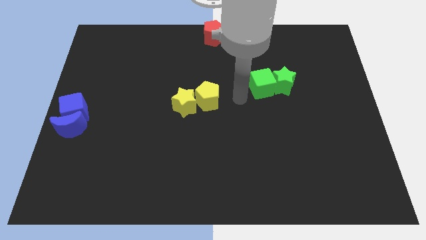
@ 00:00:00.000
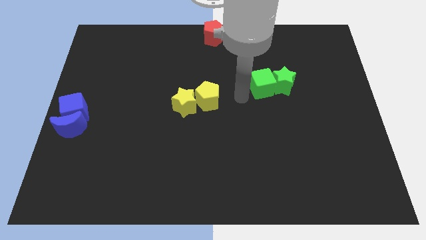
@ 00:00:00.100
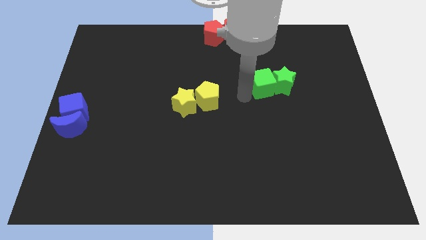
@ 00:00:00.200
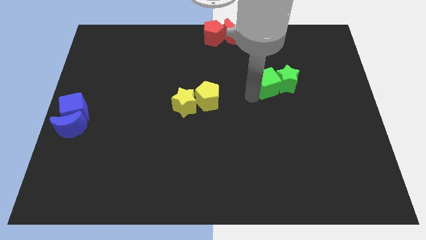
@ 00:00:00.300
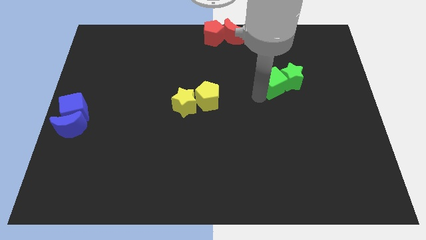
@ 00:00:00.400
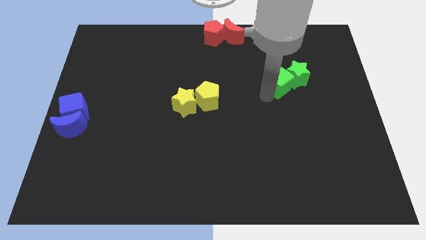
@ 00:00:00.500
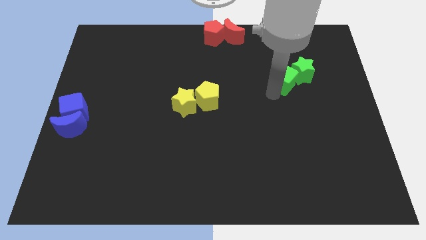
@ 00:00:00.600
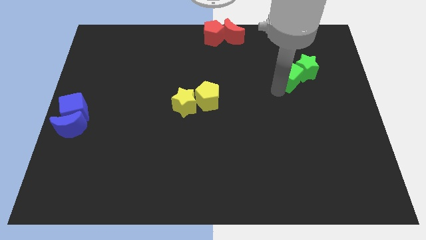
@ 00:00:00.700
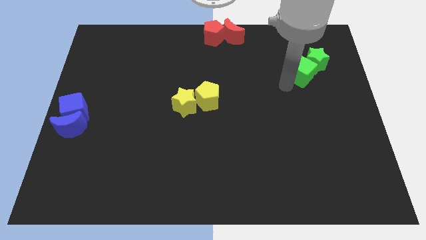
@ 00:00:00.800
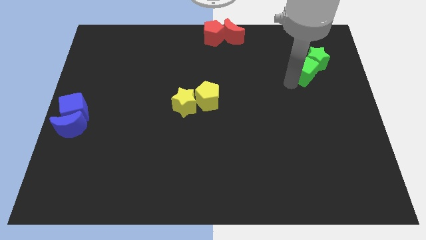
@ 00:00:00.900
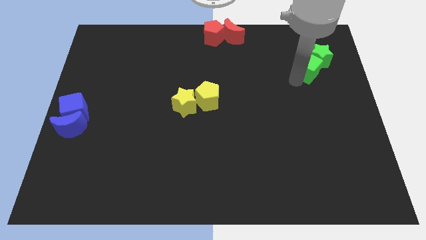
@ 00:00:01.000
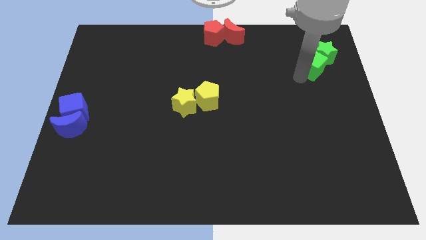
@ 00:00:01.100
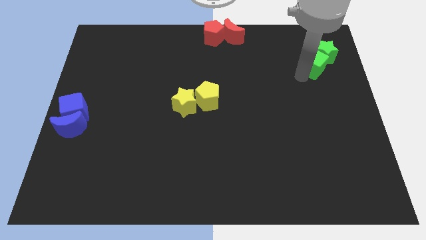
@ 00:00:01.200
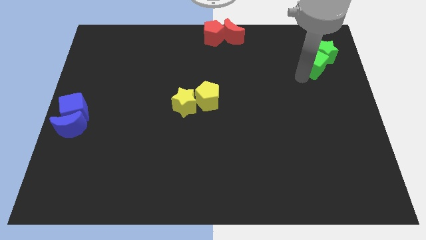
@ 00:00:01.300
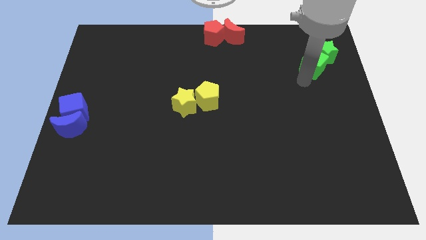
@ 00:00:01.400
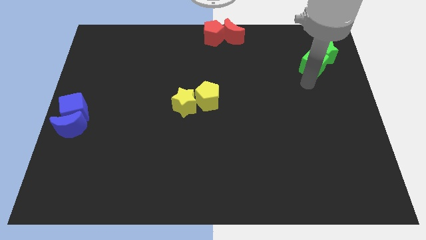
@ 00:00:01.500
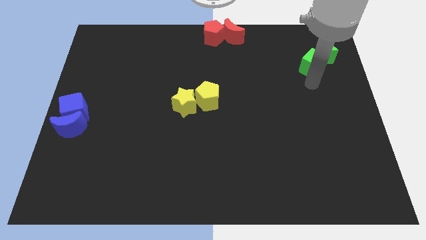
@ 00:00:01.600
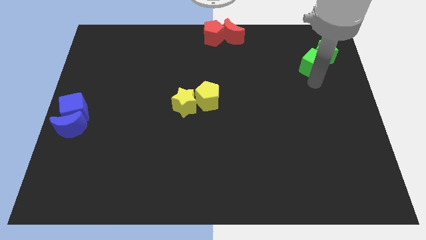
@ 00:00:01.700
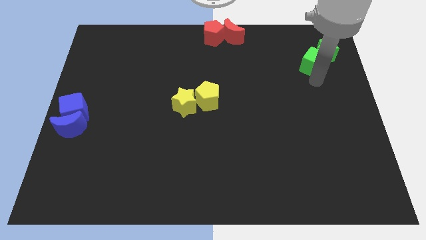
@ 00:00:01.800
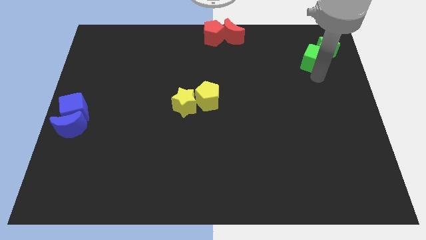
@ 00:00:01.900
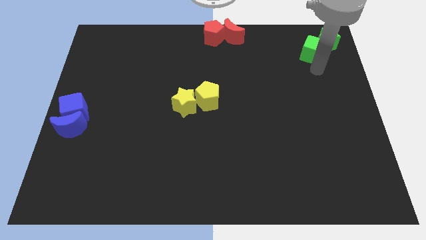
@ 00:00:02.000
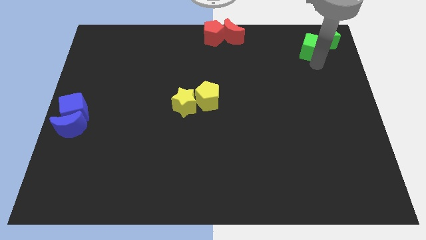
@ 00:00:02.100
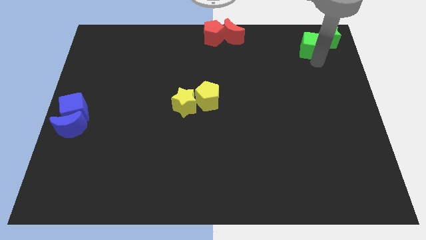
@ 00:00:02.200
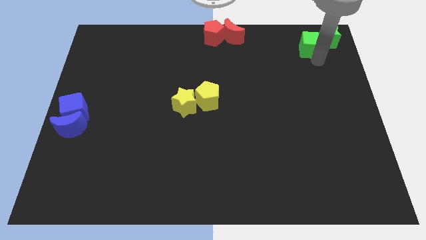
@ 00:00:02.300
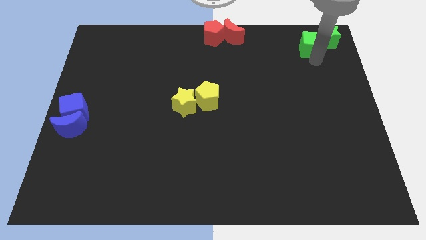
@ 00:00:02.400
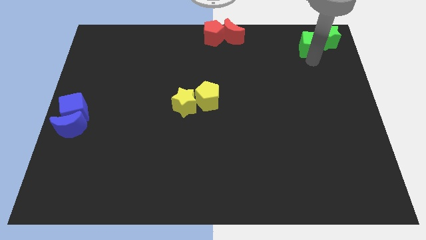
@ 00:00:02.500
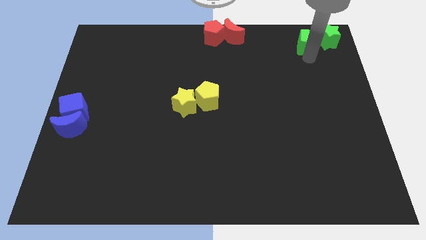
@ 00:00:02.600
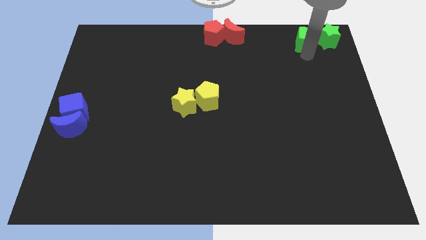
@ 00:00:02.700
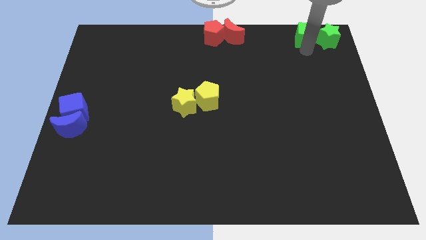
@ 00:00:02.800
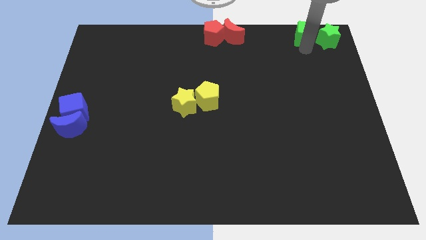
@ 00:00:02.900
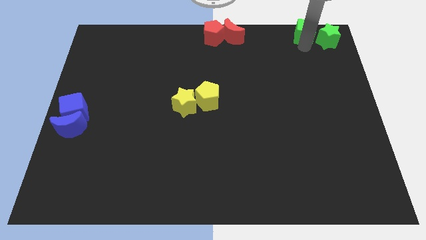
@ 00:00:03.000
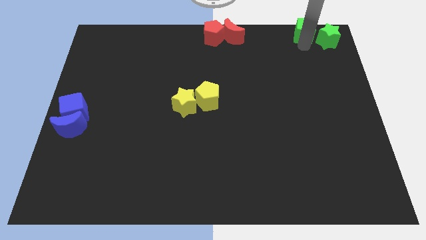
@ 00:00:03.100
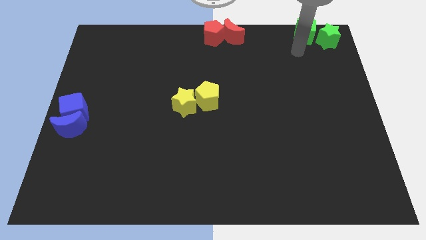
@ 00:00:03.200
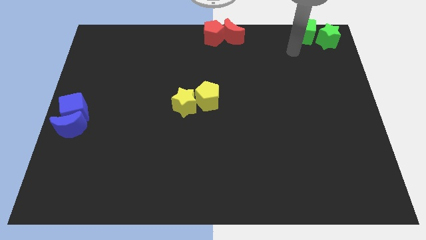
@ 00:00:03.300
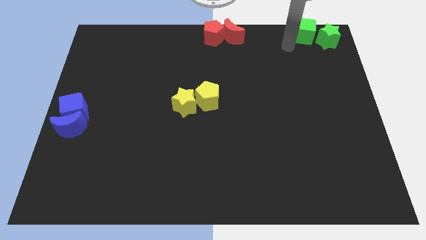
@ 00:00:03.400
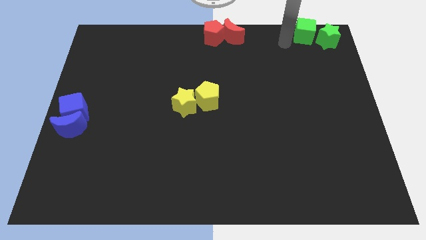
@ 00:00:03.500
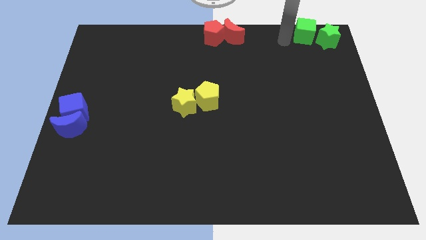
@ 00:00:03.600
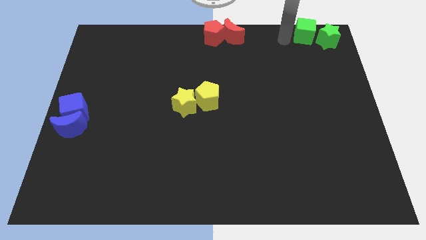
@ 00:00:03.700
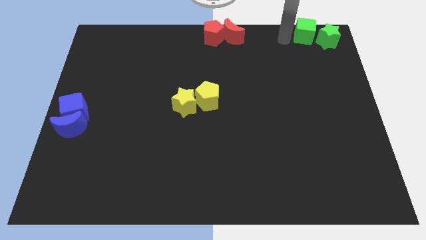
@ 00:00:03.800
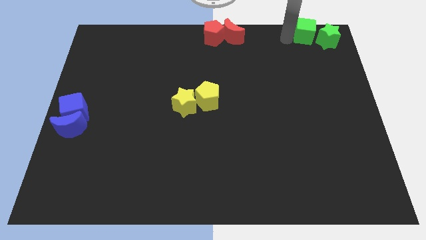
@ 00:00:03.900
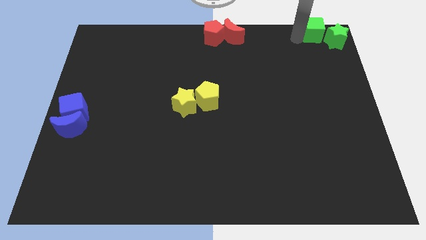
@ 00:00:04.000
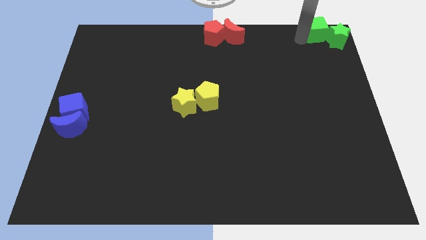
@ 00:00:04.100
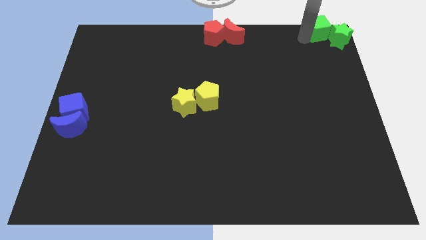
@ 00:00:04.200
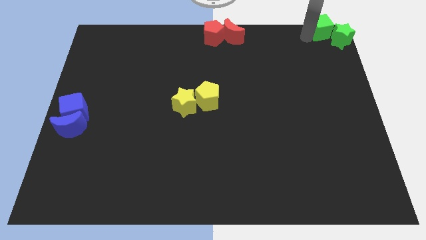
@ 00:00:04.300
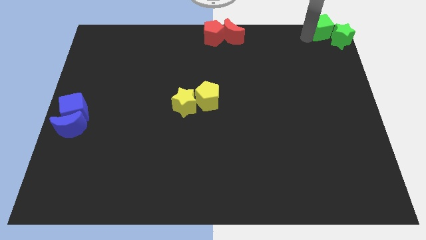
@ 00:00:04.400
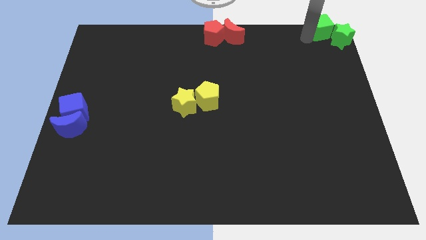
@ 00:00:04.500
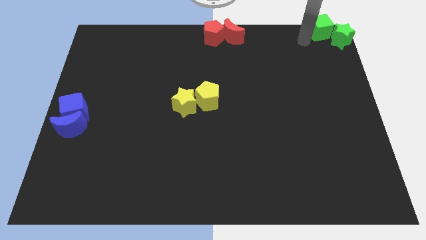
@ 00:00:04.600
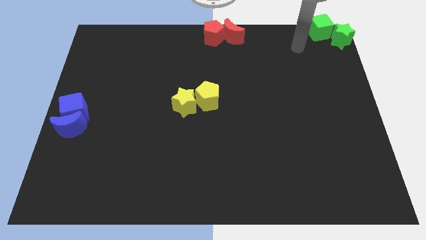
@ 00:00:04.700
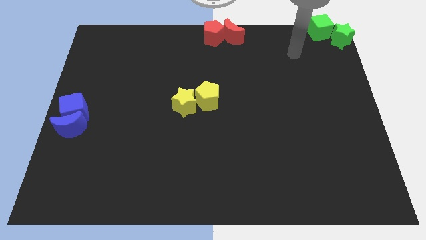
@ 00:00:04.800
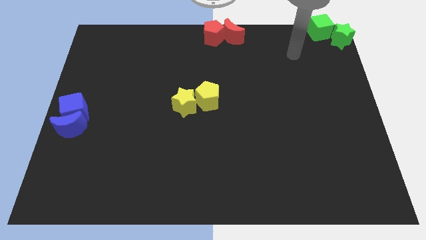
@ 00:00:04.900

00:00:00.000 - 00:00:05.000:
slide the green cube and green star to the top right corner of the board

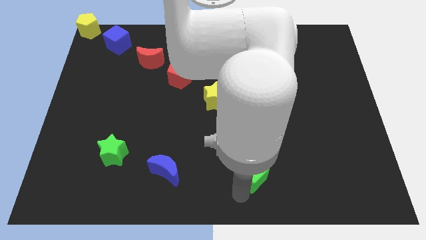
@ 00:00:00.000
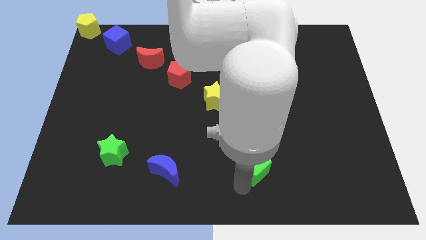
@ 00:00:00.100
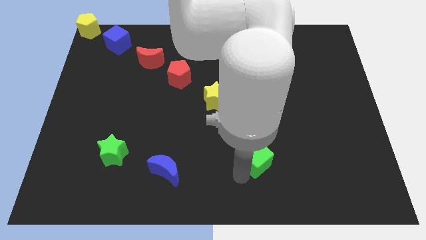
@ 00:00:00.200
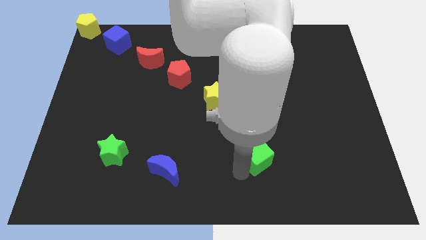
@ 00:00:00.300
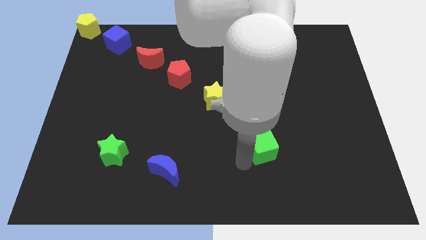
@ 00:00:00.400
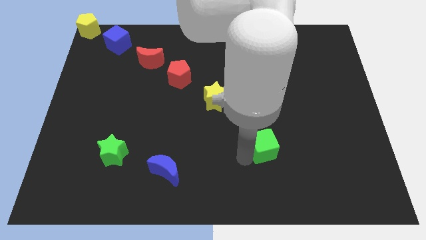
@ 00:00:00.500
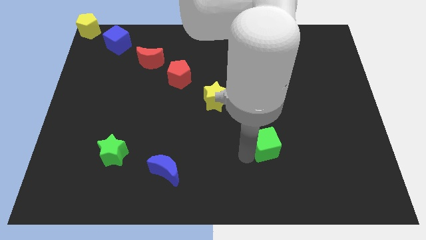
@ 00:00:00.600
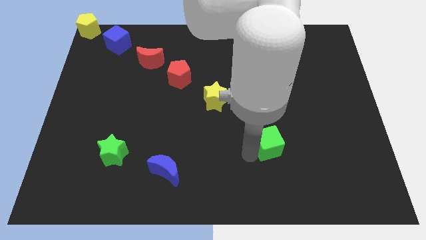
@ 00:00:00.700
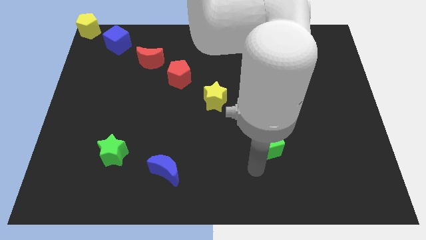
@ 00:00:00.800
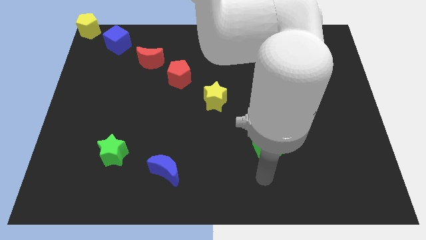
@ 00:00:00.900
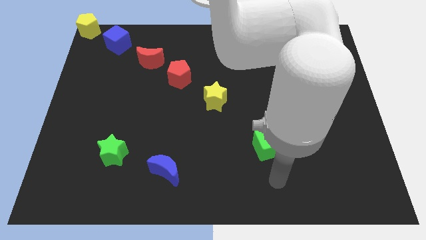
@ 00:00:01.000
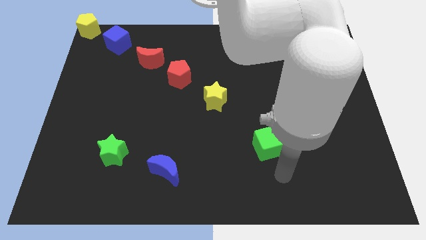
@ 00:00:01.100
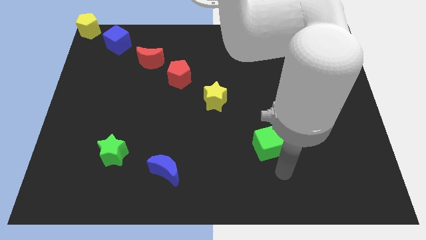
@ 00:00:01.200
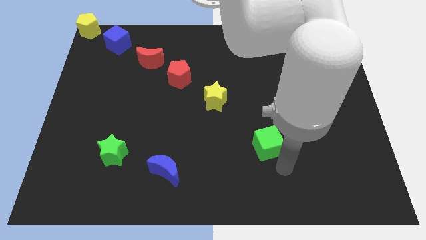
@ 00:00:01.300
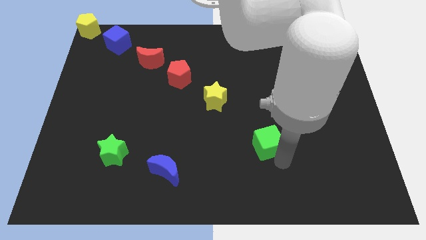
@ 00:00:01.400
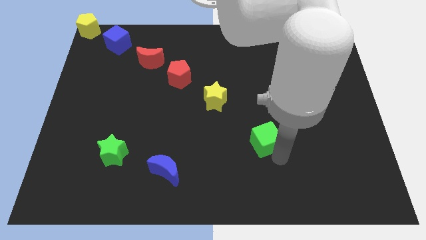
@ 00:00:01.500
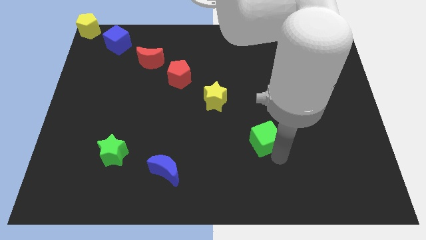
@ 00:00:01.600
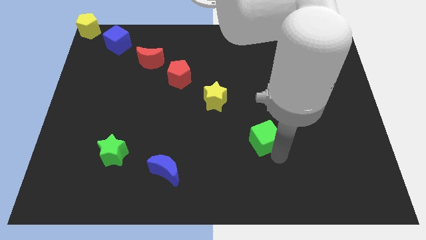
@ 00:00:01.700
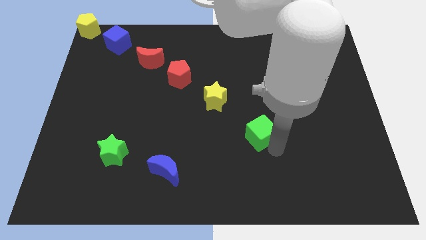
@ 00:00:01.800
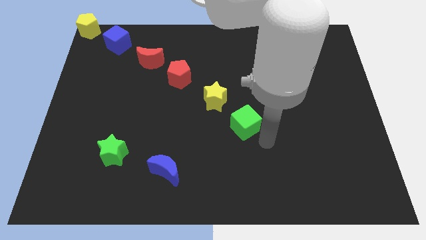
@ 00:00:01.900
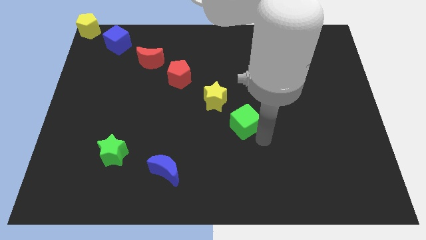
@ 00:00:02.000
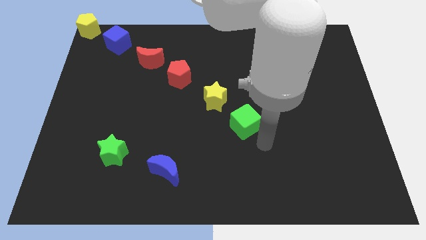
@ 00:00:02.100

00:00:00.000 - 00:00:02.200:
move the green cube to the bottom right side of the yellow star on the board

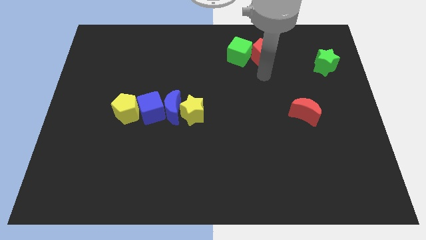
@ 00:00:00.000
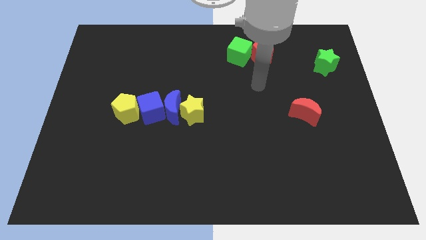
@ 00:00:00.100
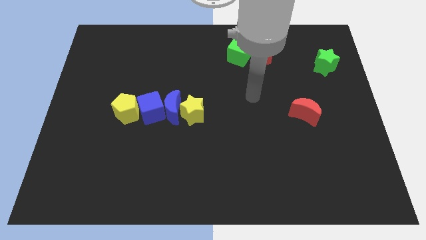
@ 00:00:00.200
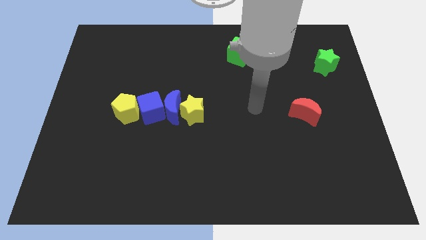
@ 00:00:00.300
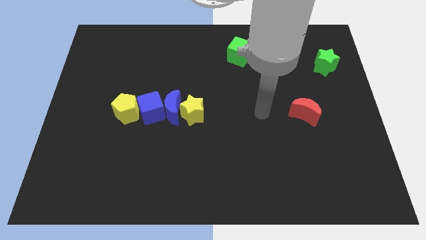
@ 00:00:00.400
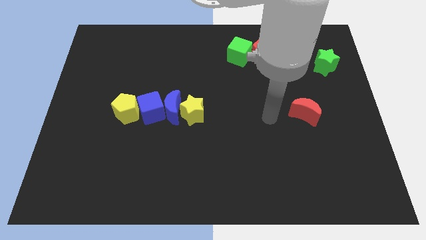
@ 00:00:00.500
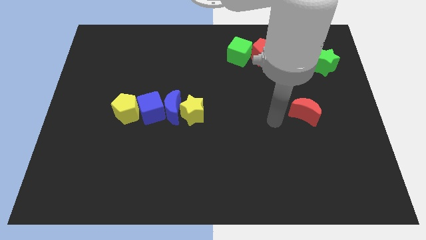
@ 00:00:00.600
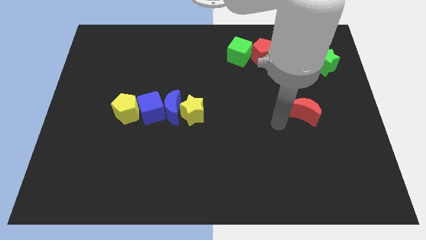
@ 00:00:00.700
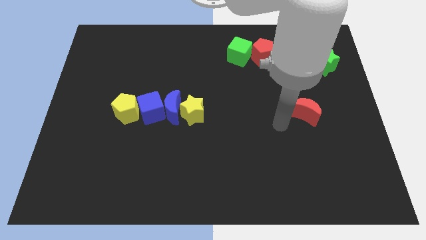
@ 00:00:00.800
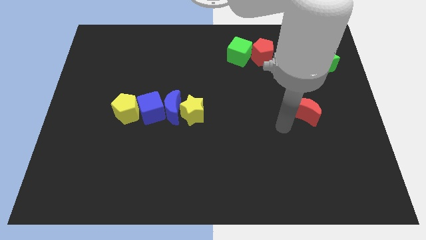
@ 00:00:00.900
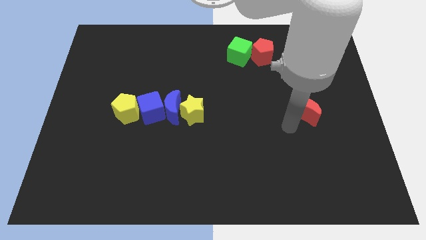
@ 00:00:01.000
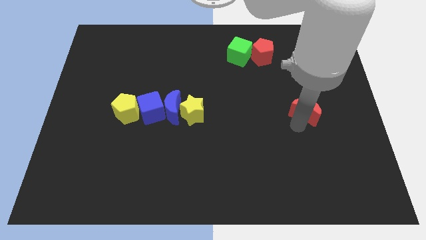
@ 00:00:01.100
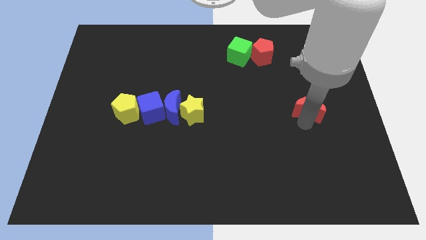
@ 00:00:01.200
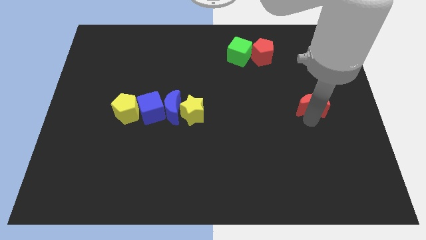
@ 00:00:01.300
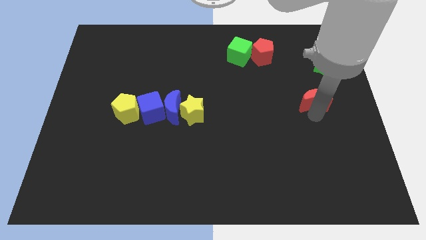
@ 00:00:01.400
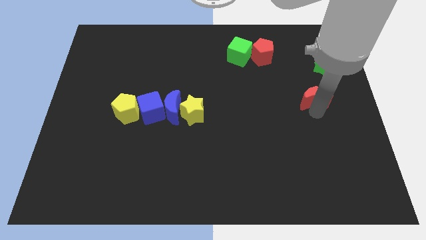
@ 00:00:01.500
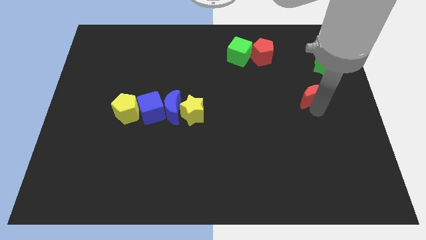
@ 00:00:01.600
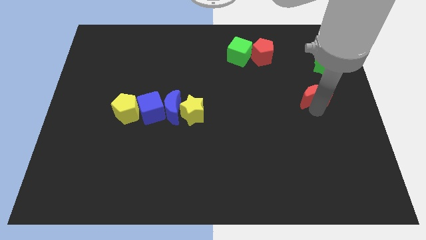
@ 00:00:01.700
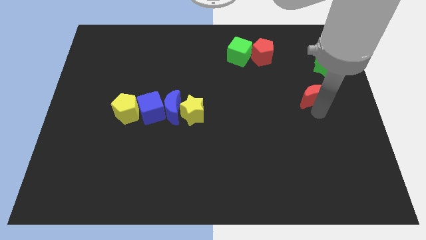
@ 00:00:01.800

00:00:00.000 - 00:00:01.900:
push the red crescent slightly towards up
